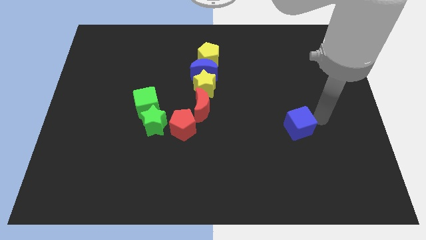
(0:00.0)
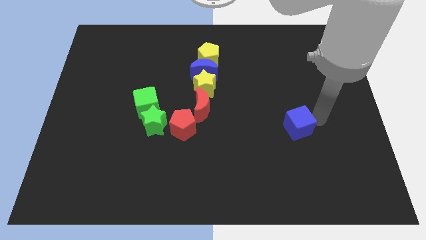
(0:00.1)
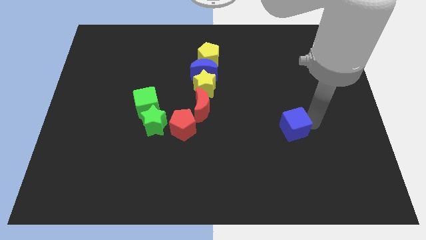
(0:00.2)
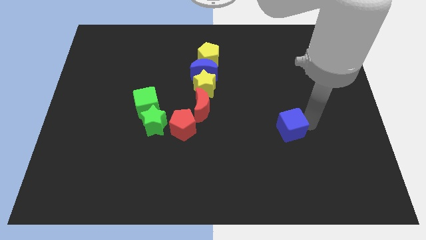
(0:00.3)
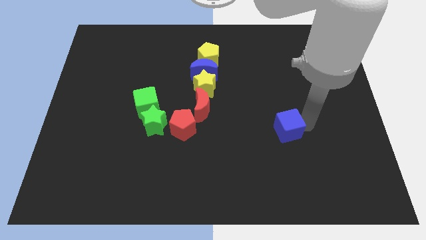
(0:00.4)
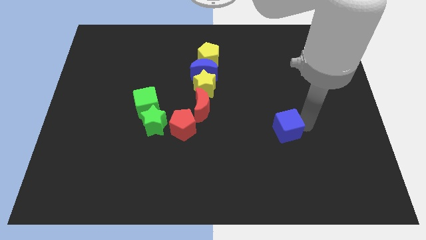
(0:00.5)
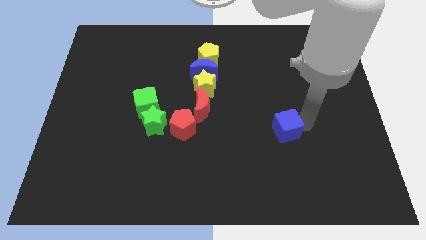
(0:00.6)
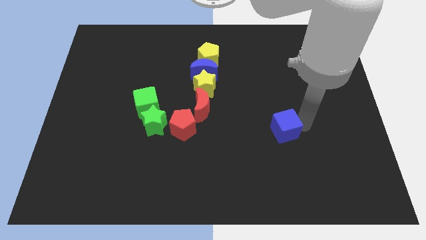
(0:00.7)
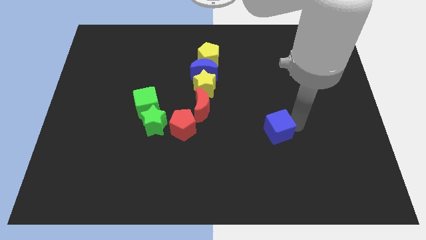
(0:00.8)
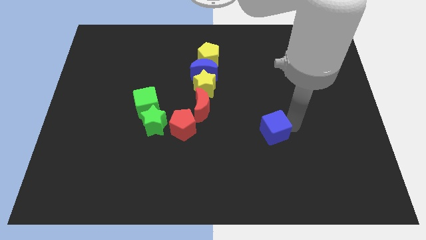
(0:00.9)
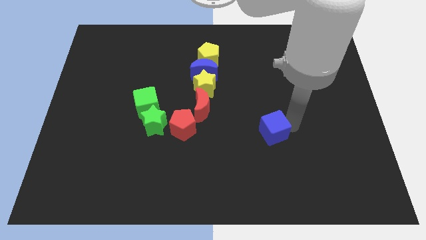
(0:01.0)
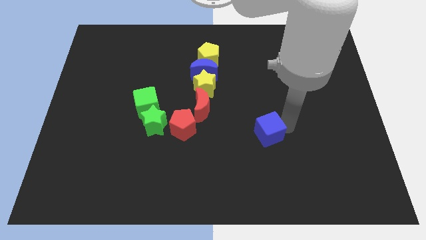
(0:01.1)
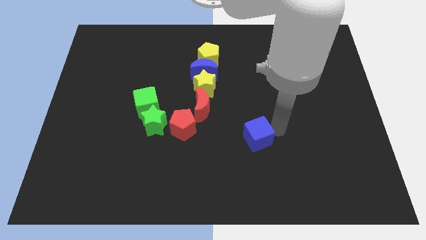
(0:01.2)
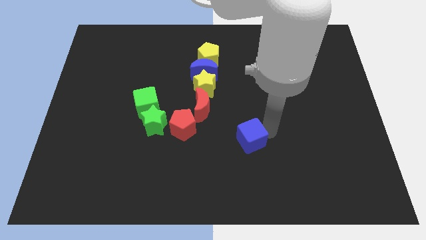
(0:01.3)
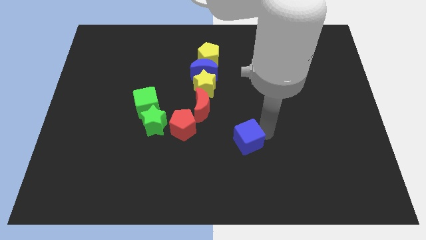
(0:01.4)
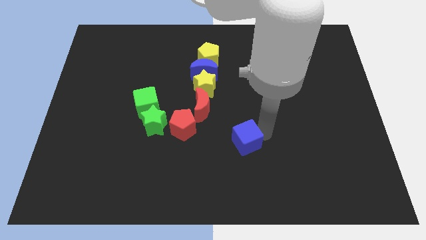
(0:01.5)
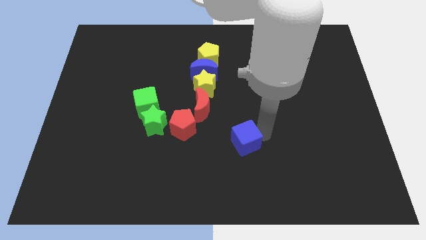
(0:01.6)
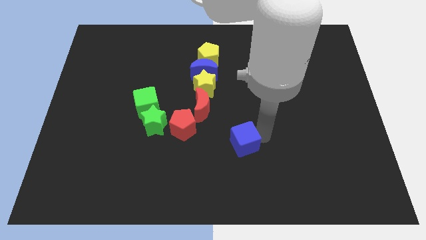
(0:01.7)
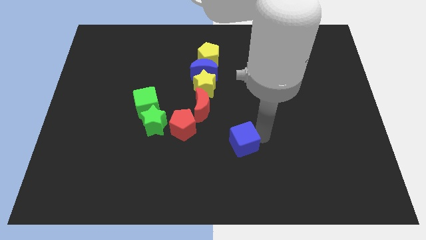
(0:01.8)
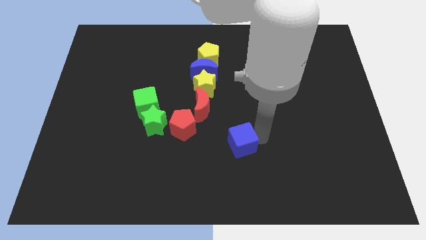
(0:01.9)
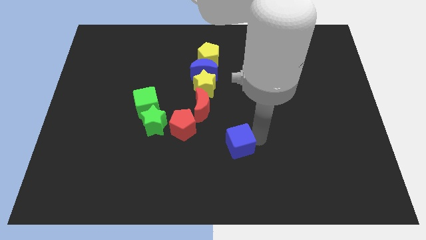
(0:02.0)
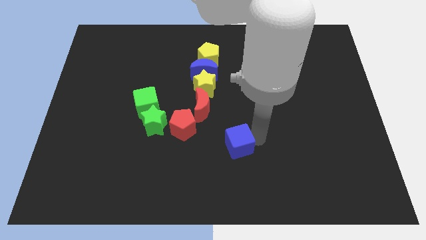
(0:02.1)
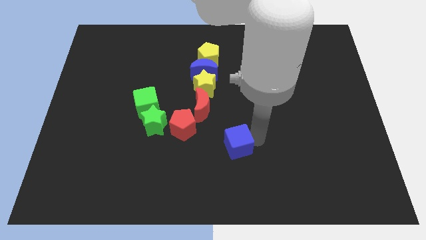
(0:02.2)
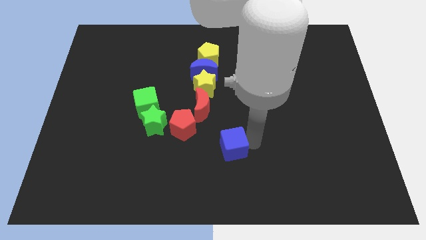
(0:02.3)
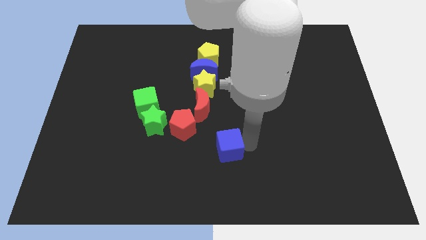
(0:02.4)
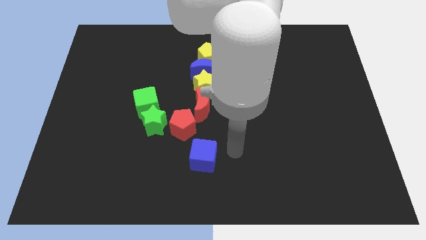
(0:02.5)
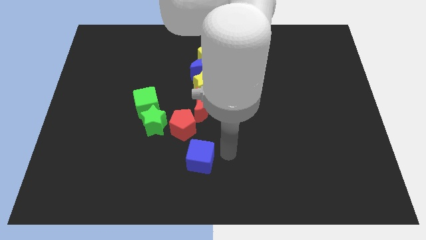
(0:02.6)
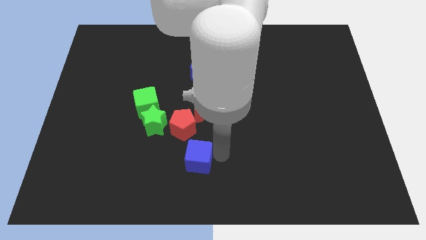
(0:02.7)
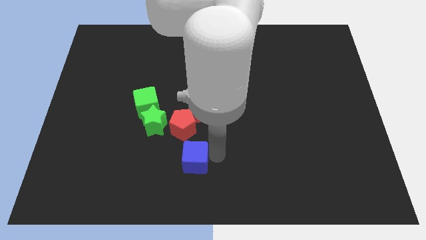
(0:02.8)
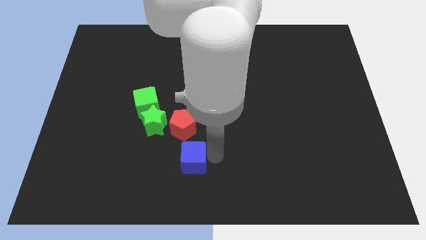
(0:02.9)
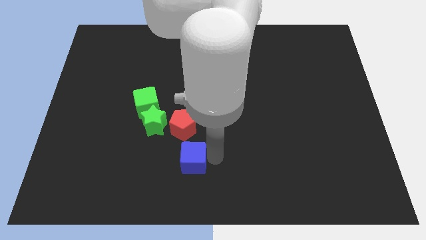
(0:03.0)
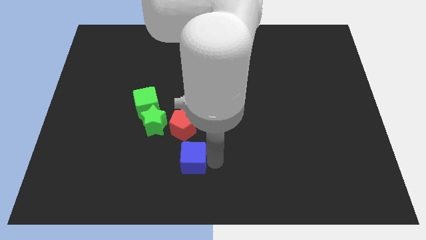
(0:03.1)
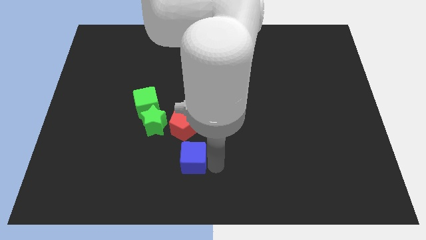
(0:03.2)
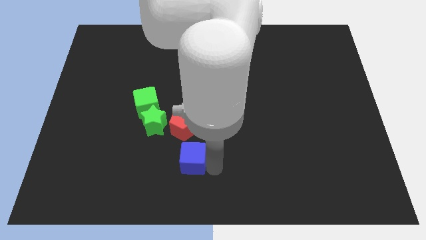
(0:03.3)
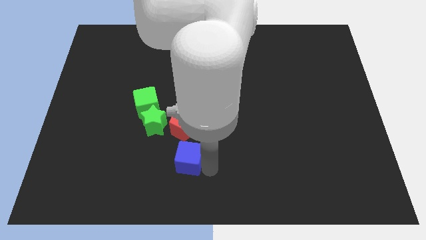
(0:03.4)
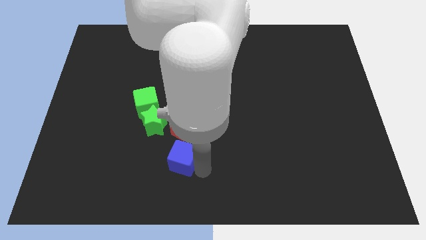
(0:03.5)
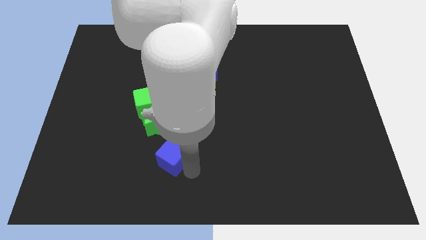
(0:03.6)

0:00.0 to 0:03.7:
move the blue cube to the bottom of the red pentagon

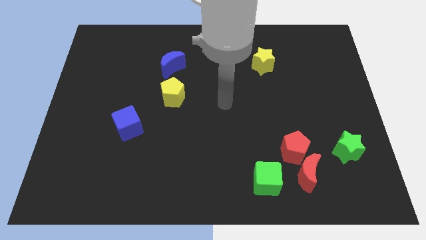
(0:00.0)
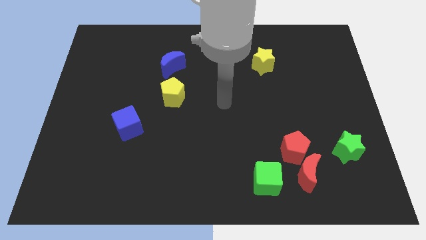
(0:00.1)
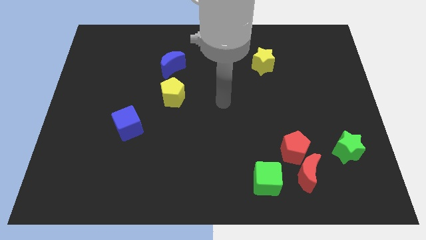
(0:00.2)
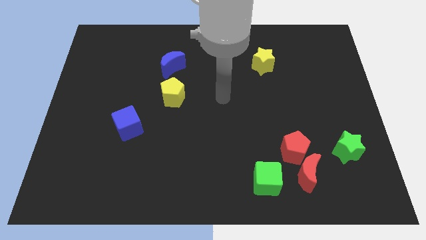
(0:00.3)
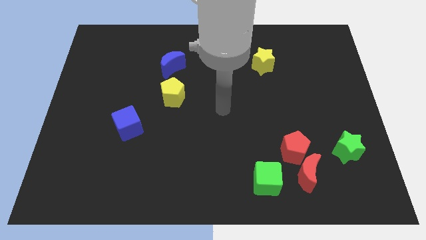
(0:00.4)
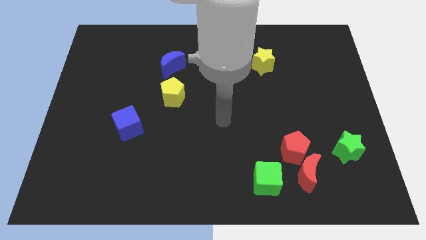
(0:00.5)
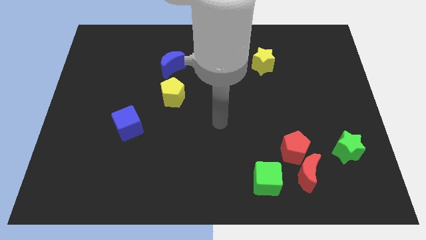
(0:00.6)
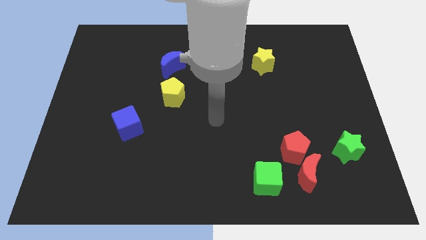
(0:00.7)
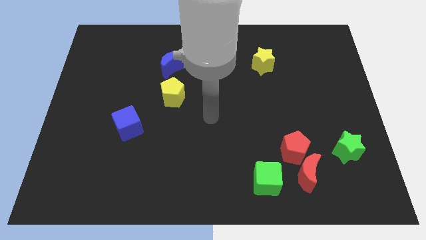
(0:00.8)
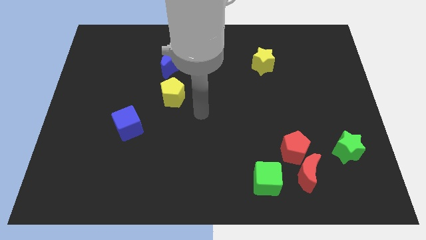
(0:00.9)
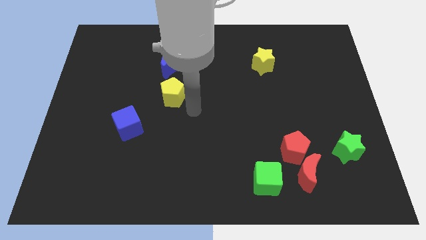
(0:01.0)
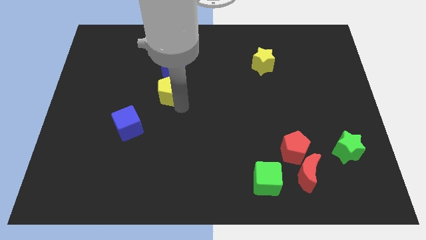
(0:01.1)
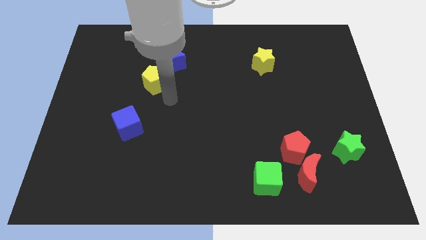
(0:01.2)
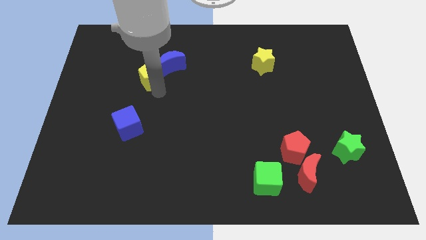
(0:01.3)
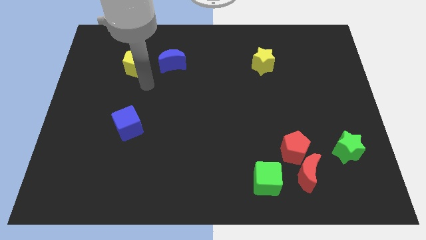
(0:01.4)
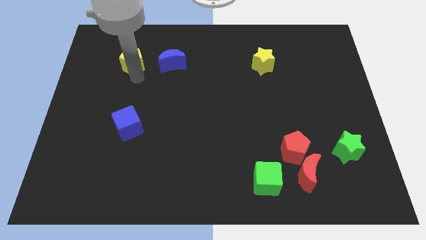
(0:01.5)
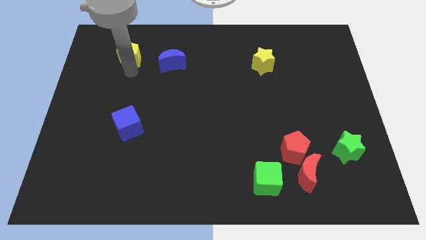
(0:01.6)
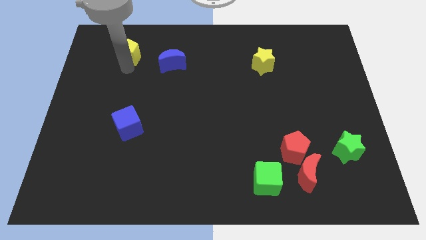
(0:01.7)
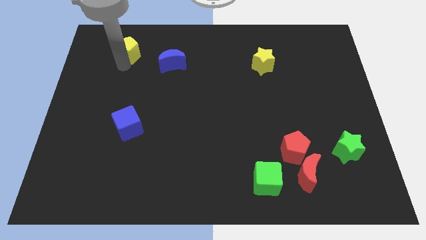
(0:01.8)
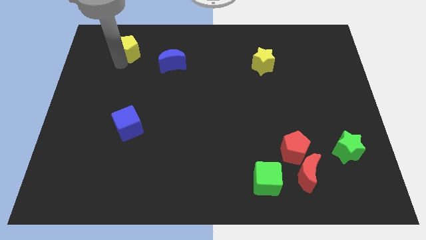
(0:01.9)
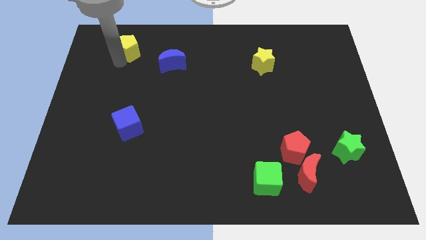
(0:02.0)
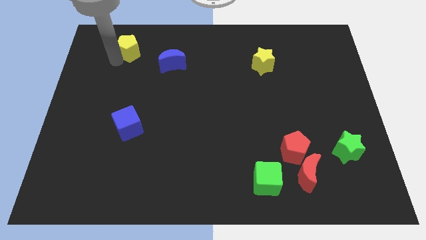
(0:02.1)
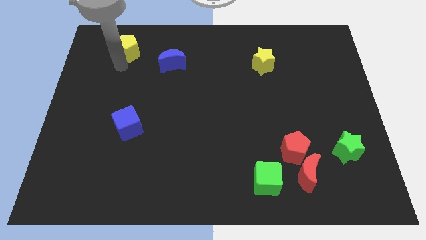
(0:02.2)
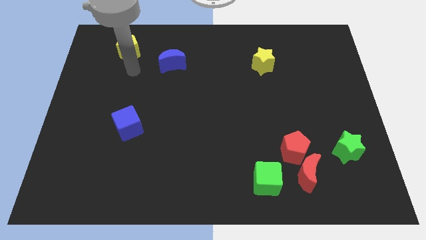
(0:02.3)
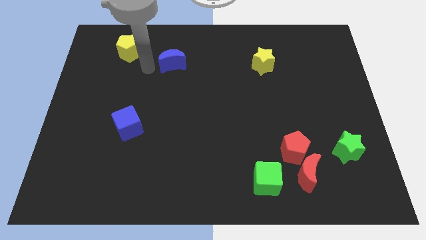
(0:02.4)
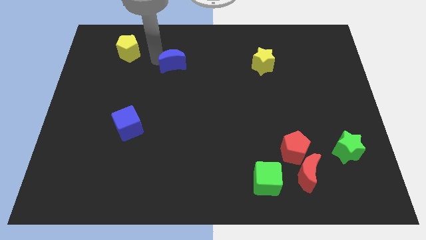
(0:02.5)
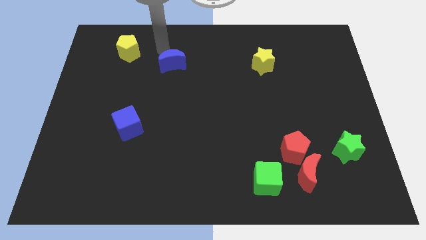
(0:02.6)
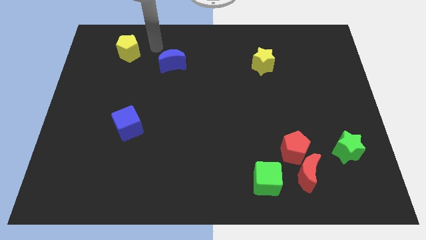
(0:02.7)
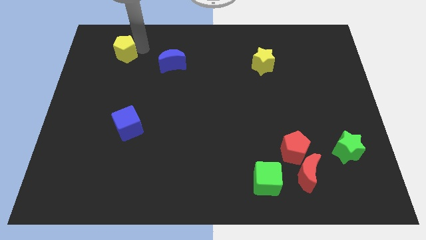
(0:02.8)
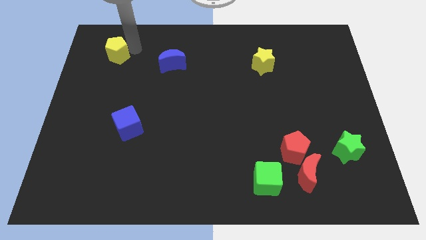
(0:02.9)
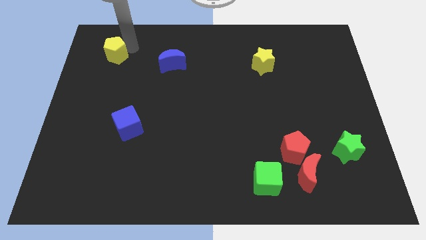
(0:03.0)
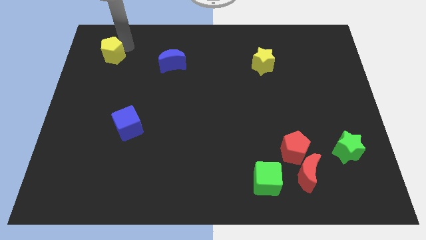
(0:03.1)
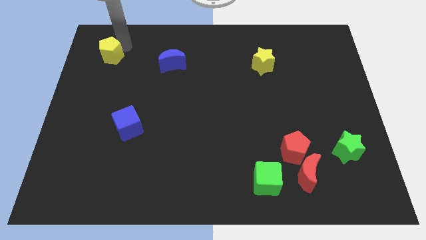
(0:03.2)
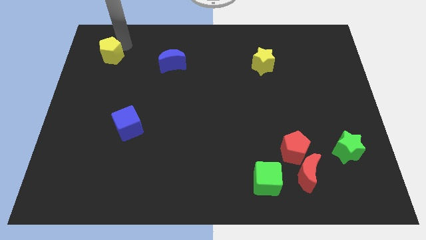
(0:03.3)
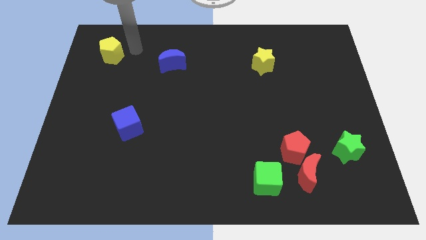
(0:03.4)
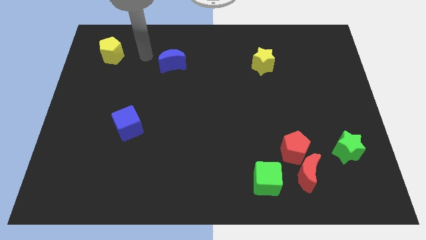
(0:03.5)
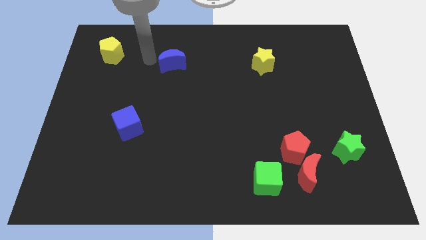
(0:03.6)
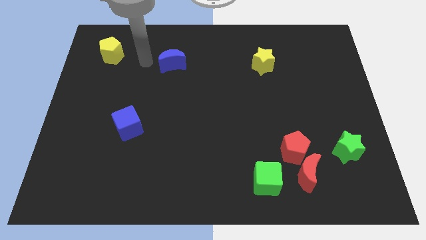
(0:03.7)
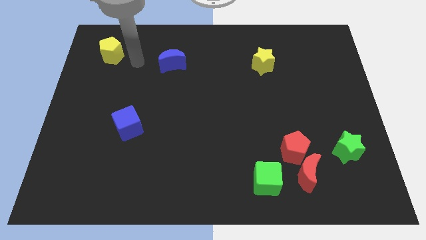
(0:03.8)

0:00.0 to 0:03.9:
separate the yellow pentagon from the blue moon

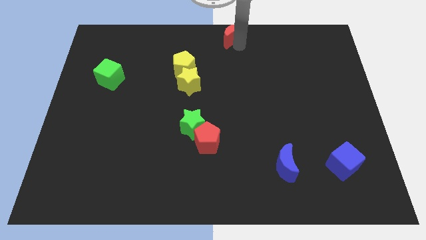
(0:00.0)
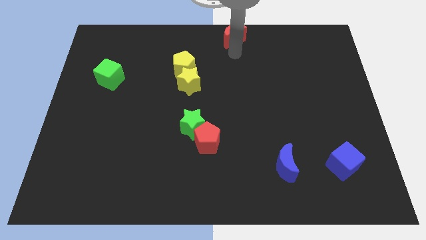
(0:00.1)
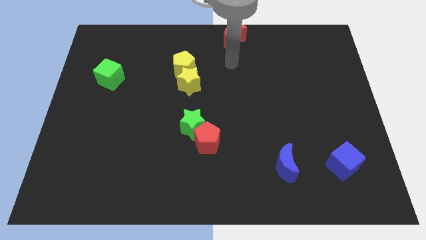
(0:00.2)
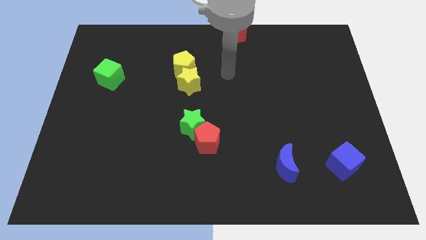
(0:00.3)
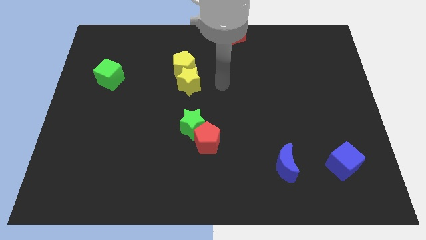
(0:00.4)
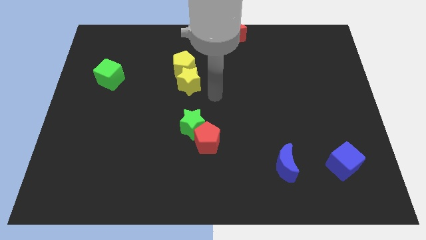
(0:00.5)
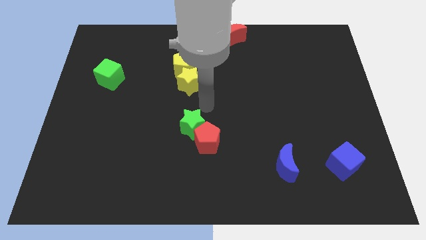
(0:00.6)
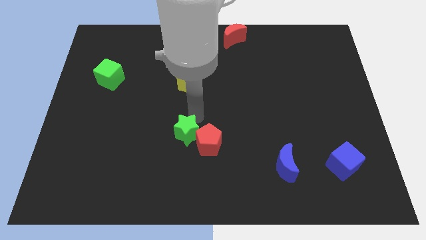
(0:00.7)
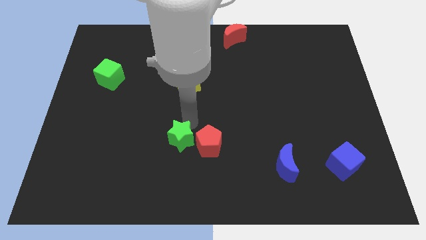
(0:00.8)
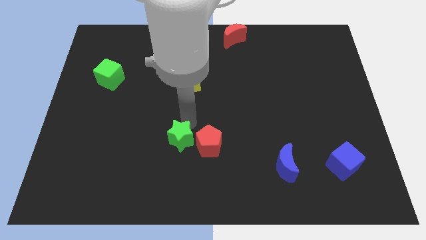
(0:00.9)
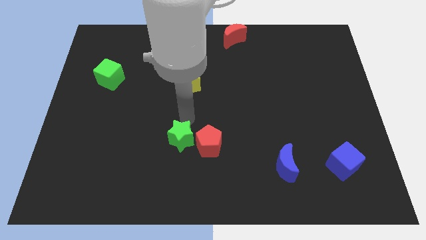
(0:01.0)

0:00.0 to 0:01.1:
push the green star towards the bottom side of the board

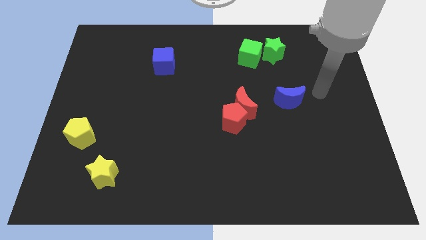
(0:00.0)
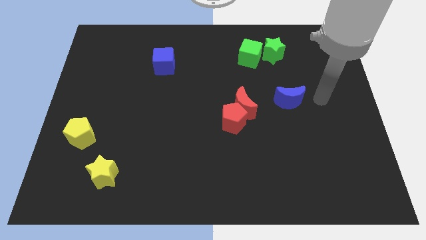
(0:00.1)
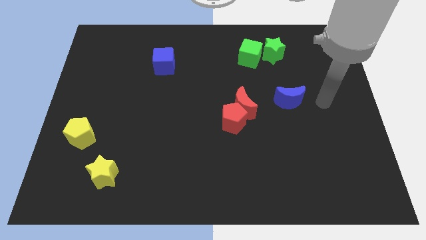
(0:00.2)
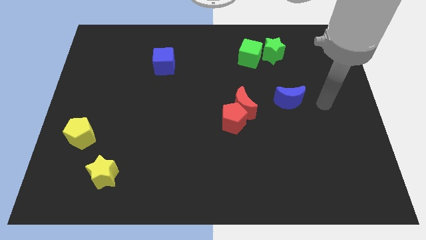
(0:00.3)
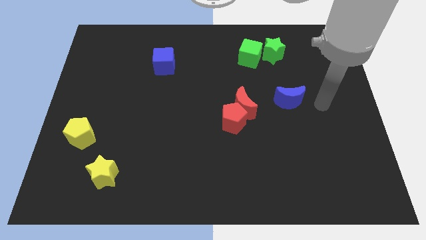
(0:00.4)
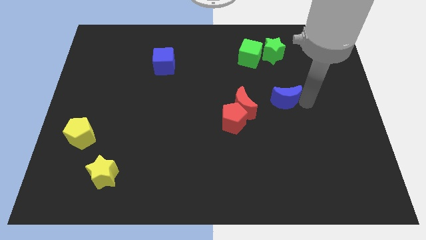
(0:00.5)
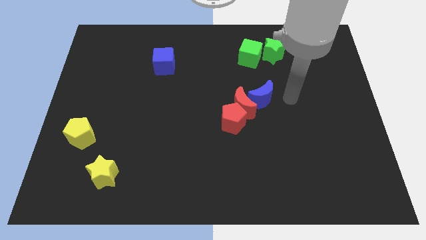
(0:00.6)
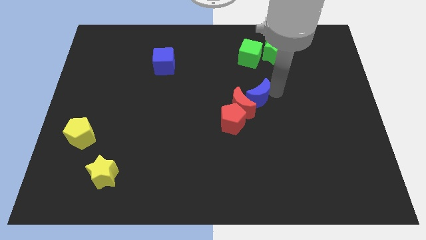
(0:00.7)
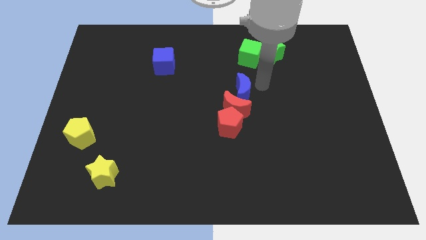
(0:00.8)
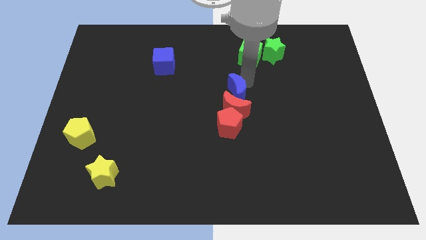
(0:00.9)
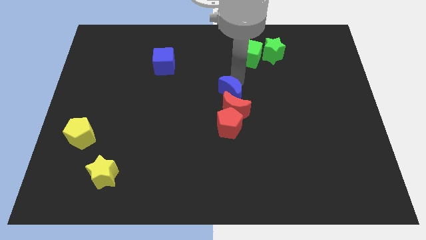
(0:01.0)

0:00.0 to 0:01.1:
slide blue moon on top of red moon
